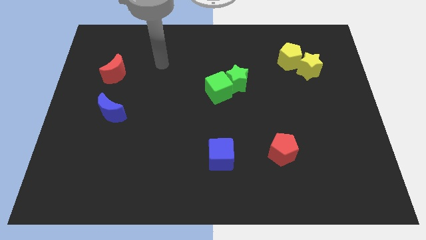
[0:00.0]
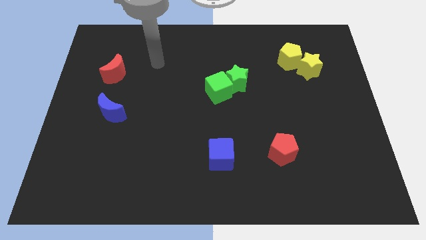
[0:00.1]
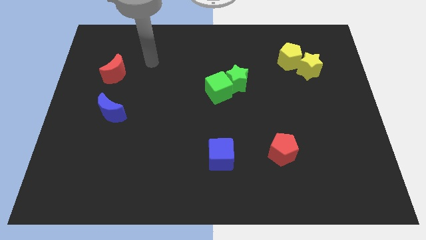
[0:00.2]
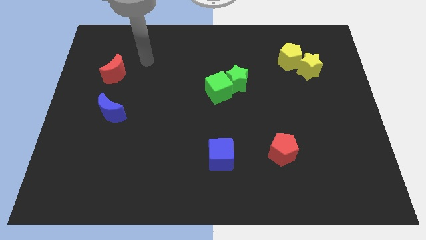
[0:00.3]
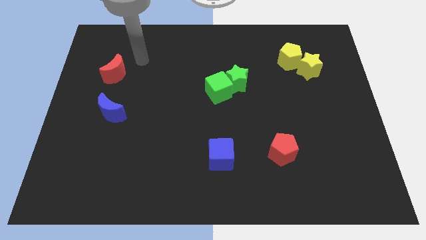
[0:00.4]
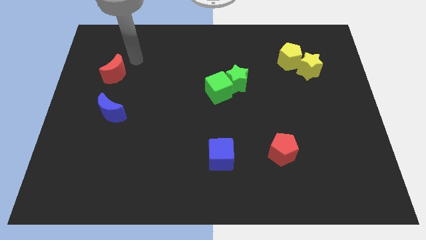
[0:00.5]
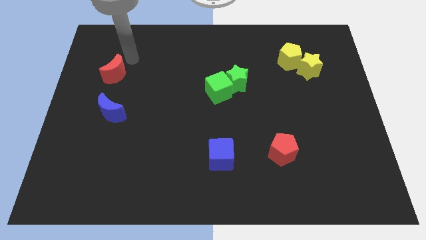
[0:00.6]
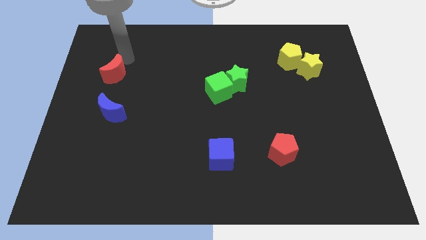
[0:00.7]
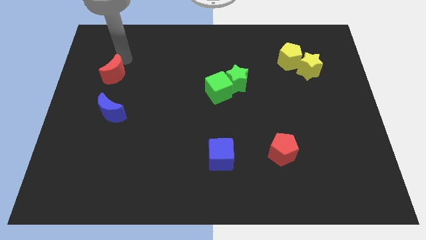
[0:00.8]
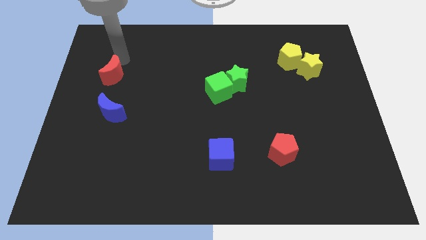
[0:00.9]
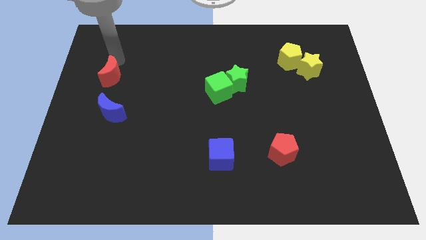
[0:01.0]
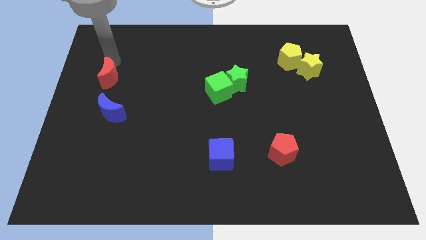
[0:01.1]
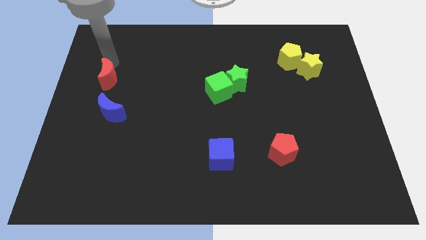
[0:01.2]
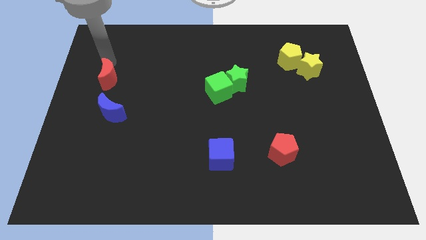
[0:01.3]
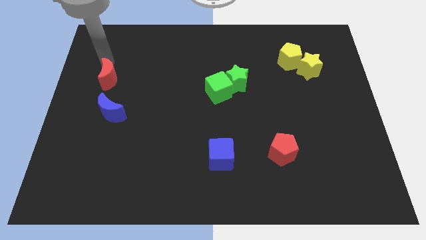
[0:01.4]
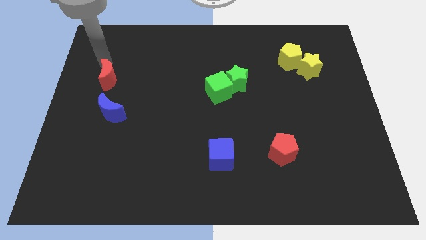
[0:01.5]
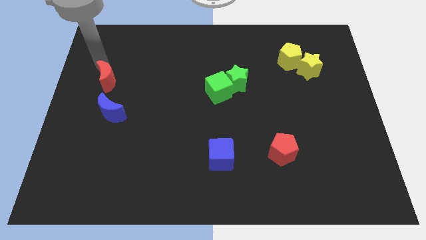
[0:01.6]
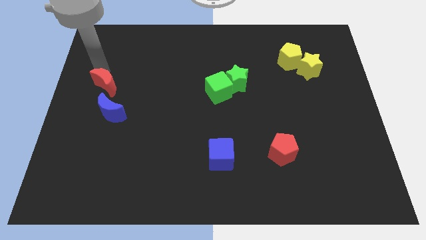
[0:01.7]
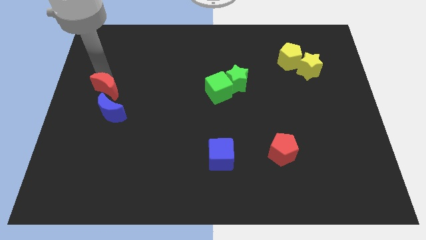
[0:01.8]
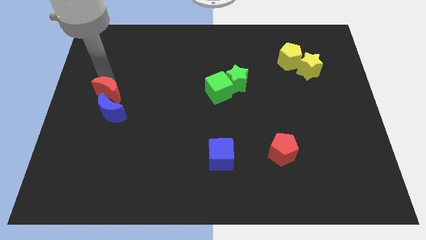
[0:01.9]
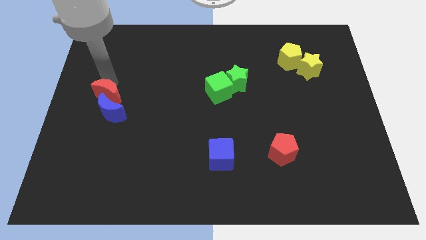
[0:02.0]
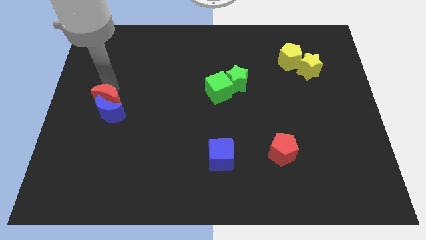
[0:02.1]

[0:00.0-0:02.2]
push the red moon on top of blue moon

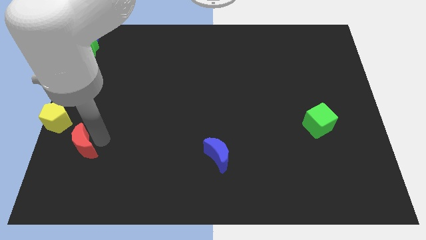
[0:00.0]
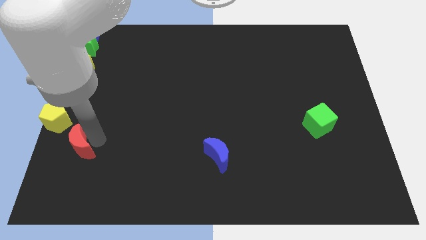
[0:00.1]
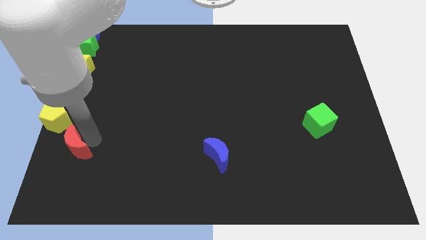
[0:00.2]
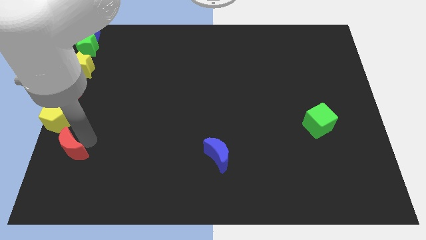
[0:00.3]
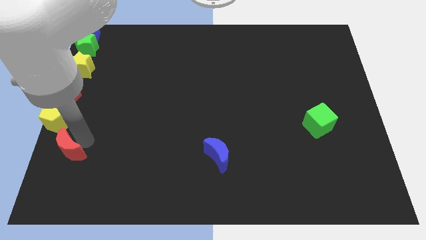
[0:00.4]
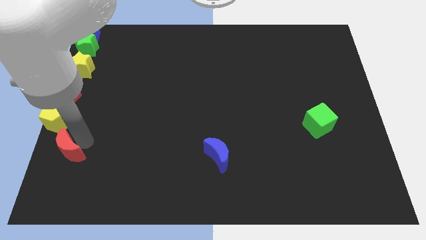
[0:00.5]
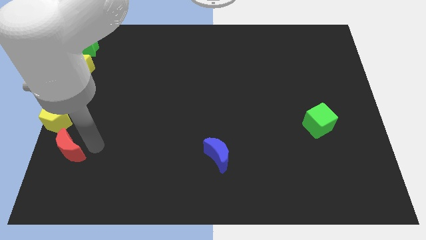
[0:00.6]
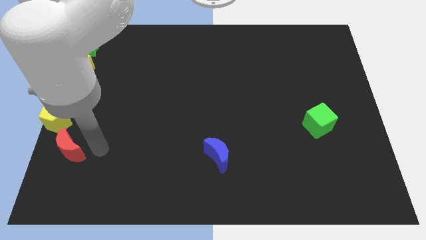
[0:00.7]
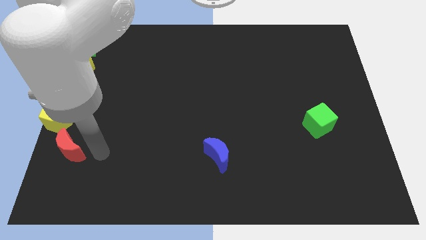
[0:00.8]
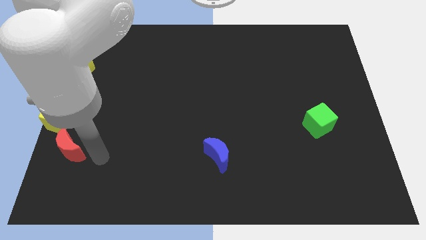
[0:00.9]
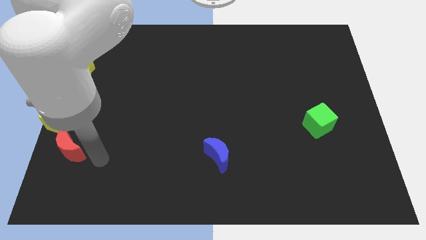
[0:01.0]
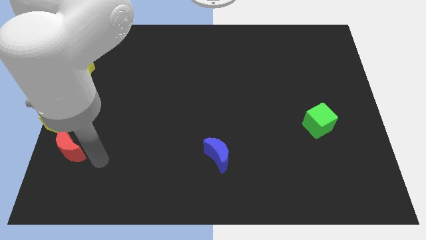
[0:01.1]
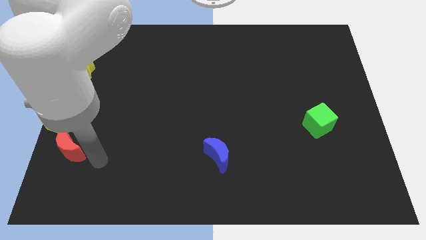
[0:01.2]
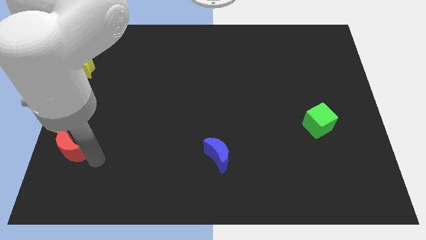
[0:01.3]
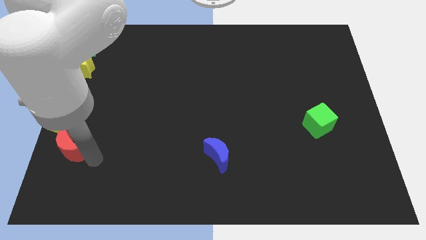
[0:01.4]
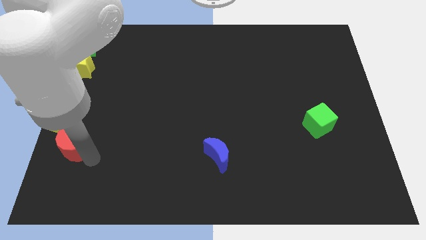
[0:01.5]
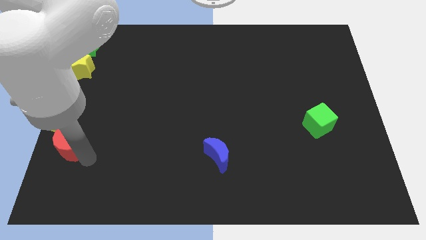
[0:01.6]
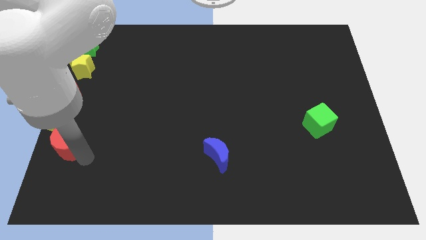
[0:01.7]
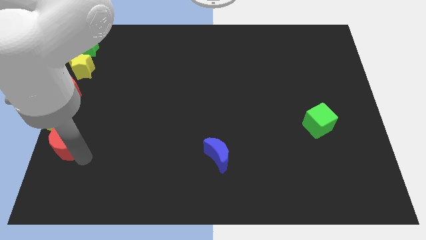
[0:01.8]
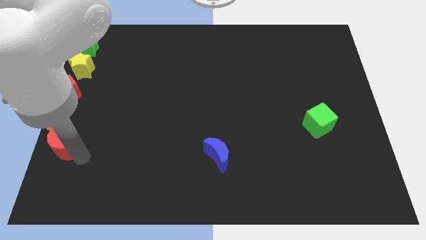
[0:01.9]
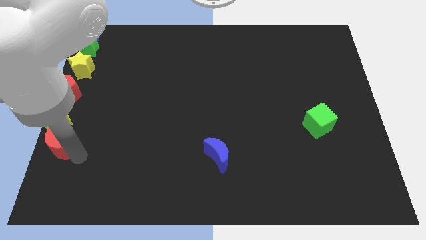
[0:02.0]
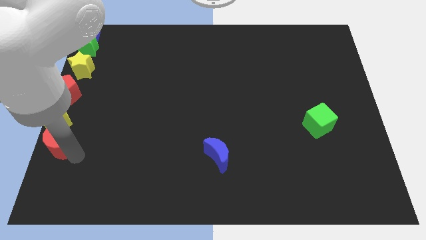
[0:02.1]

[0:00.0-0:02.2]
place the red moon below the yellow pentagon

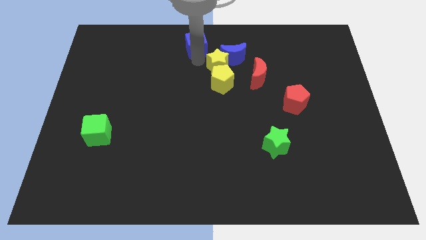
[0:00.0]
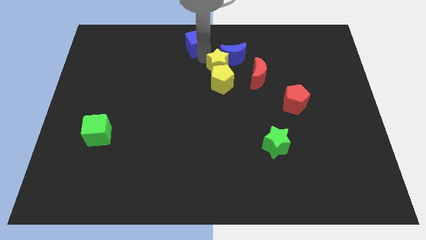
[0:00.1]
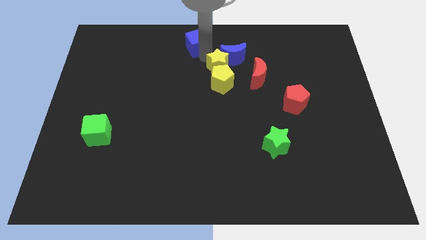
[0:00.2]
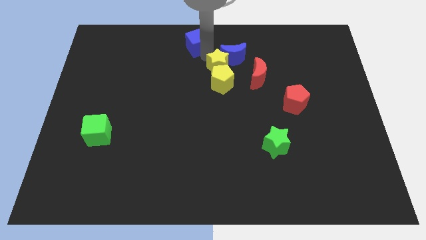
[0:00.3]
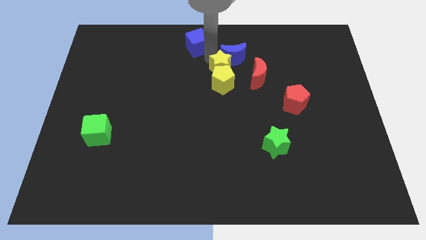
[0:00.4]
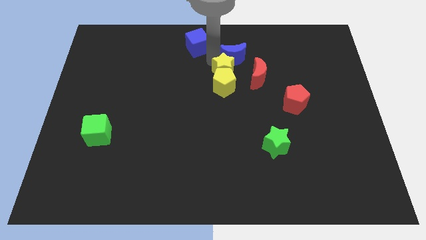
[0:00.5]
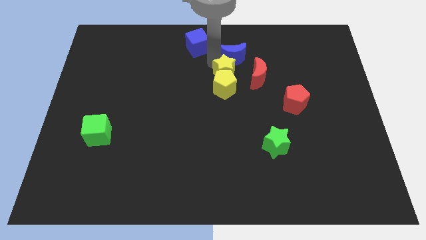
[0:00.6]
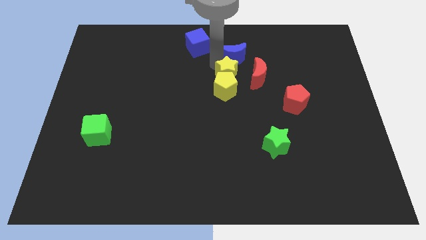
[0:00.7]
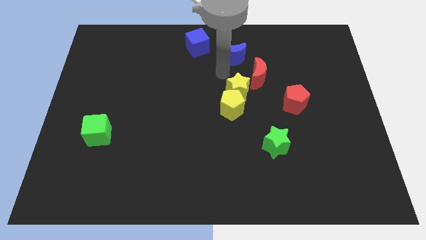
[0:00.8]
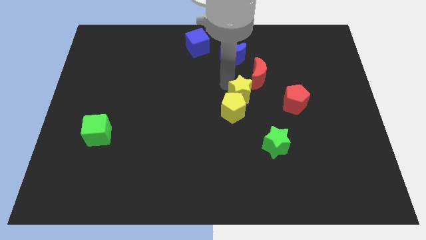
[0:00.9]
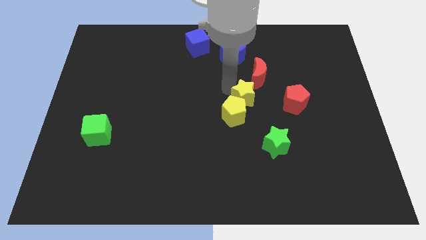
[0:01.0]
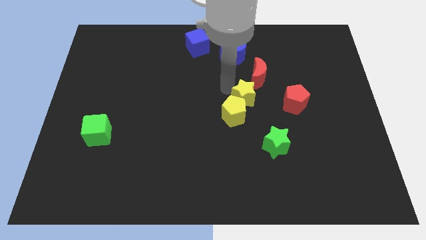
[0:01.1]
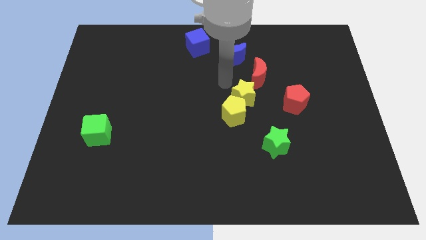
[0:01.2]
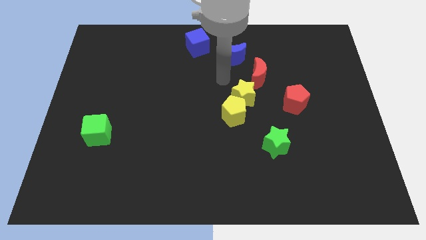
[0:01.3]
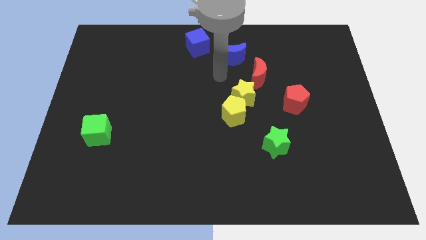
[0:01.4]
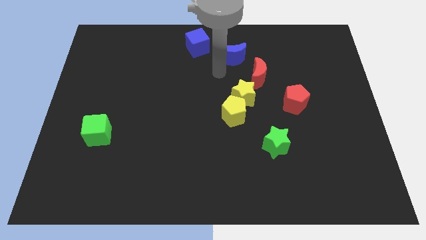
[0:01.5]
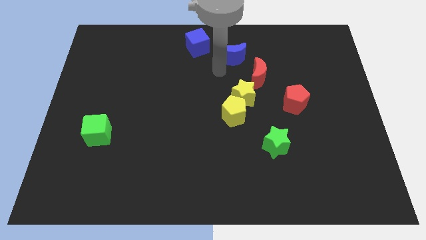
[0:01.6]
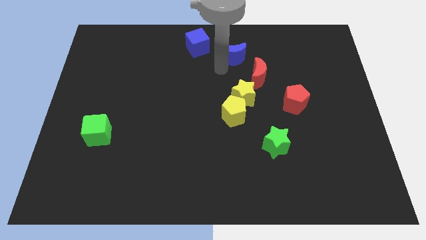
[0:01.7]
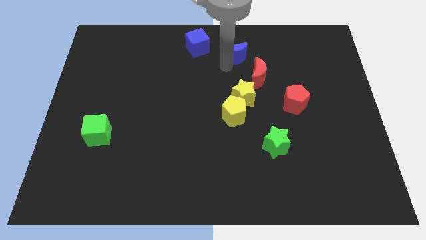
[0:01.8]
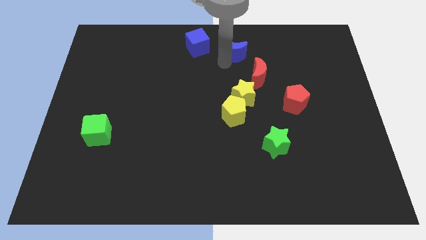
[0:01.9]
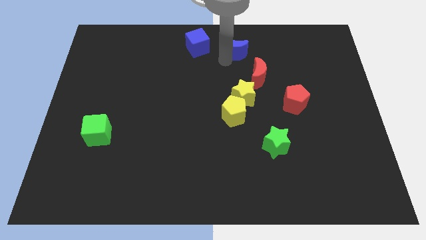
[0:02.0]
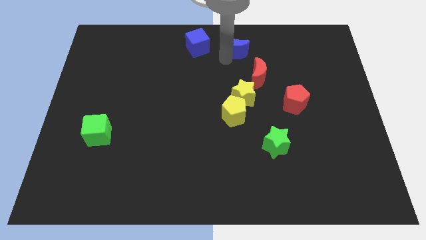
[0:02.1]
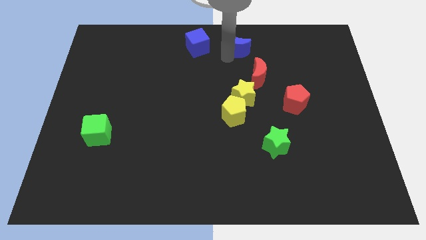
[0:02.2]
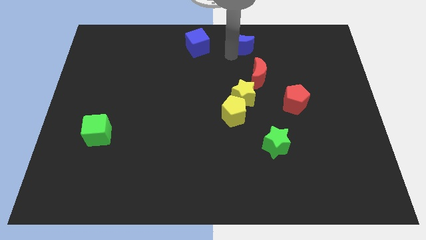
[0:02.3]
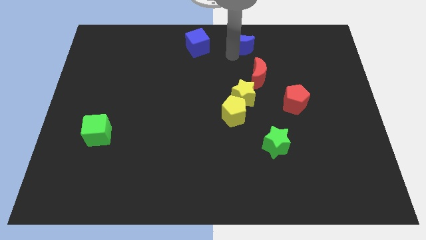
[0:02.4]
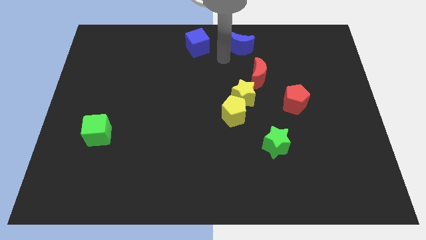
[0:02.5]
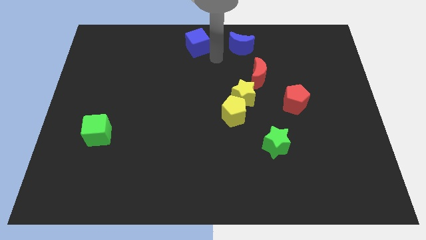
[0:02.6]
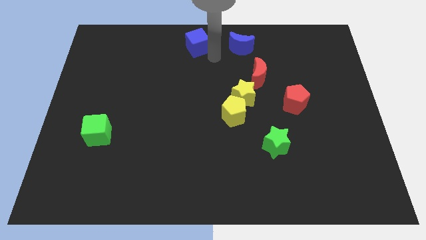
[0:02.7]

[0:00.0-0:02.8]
place the yellow star to the center

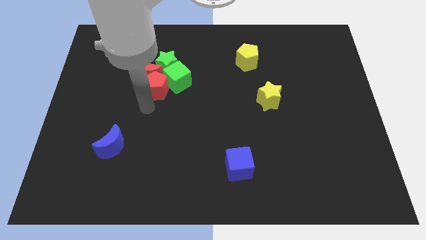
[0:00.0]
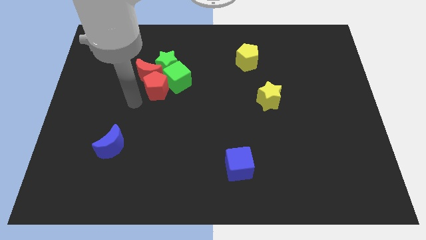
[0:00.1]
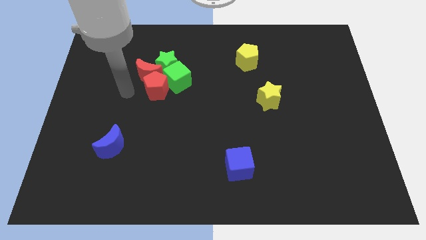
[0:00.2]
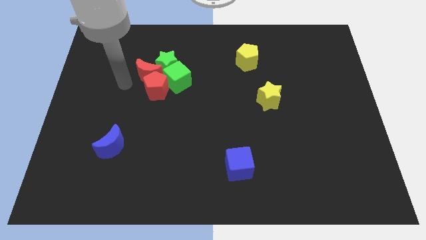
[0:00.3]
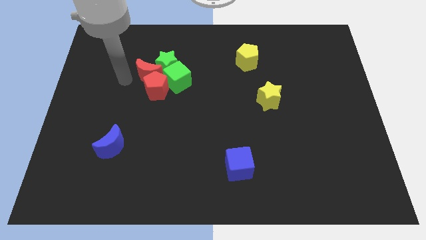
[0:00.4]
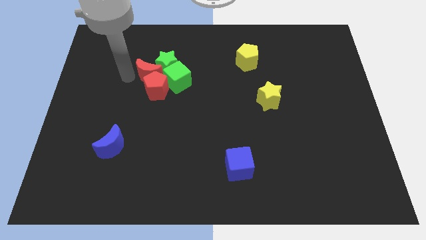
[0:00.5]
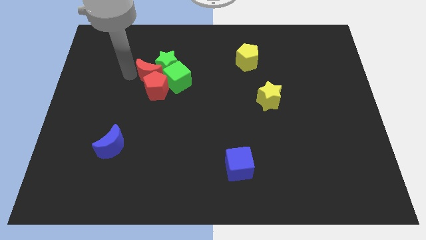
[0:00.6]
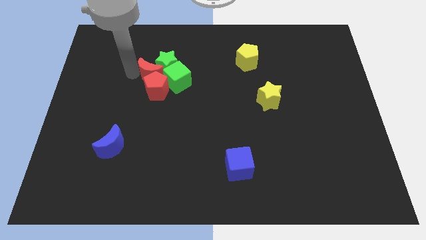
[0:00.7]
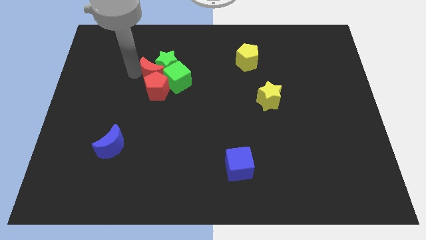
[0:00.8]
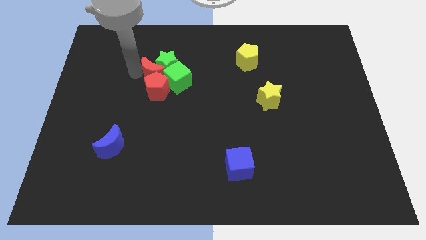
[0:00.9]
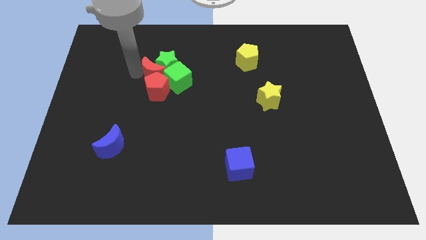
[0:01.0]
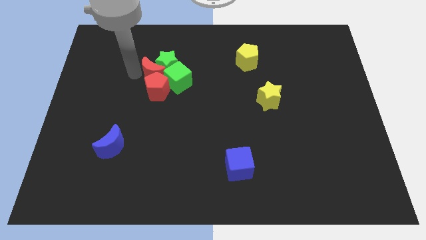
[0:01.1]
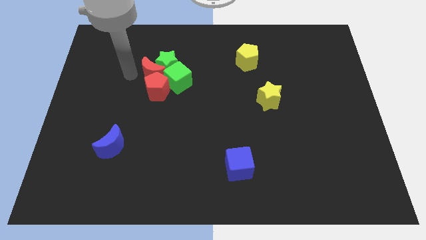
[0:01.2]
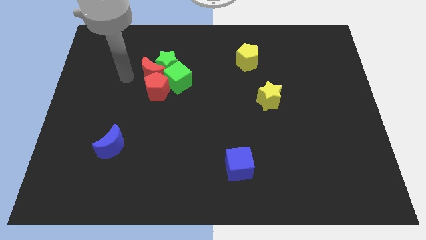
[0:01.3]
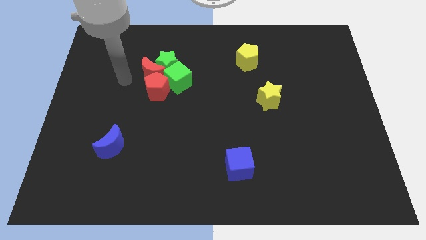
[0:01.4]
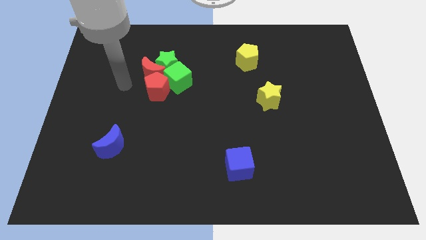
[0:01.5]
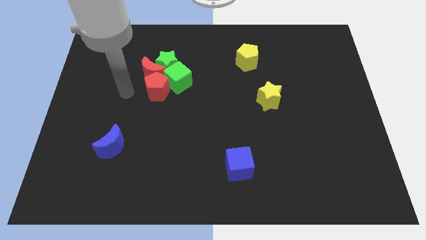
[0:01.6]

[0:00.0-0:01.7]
slightly push the red crescent to the right side

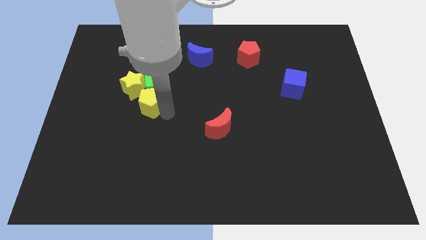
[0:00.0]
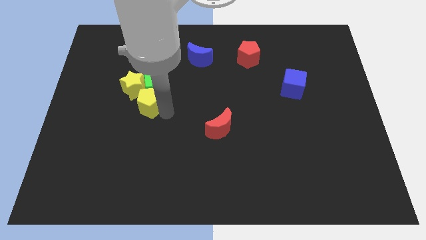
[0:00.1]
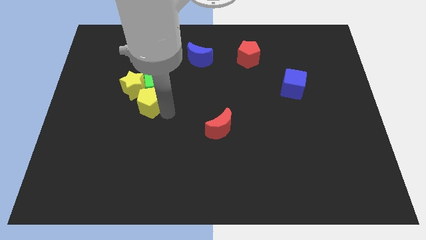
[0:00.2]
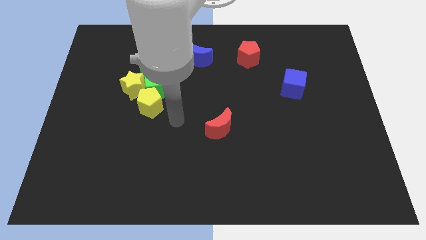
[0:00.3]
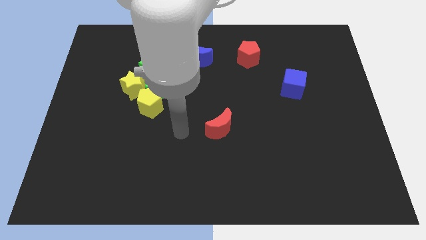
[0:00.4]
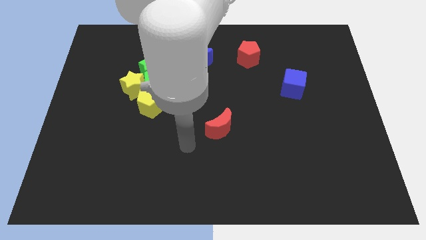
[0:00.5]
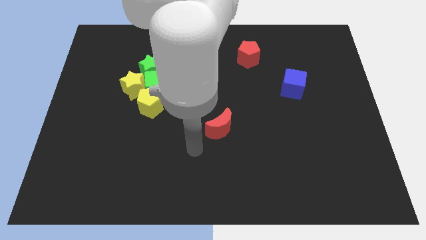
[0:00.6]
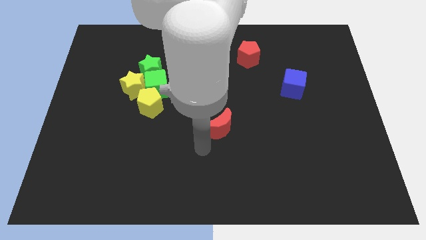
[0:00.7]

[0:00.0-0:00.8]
place your arm to the bottom of red moon
